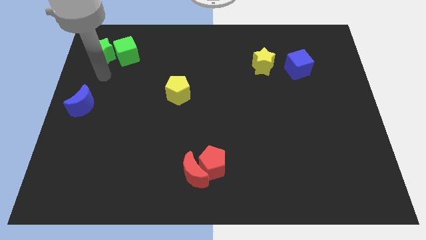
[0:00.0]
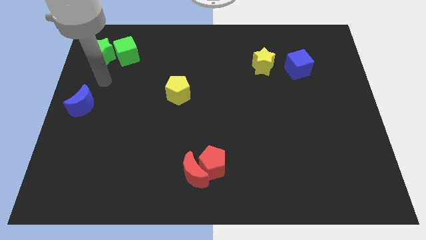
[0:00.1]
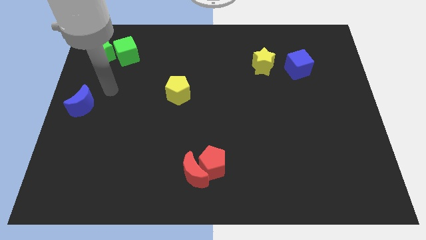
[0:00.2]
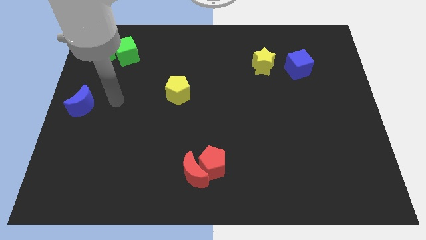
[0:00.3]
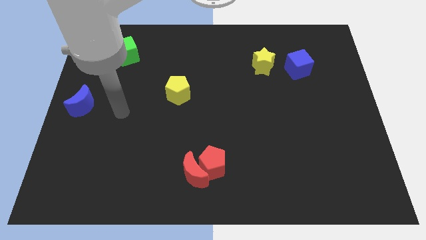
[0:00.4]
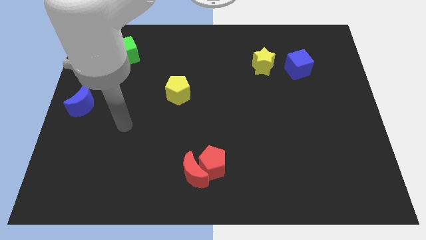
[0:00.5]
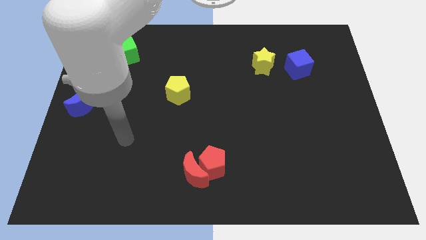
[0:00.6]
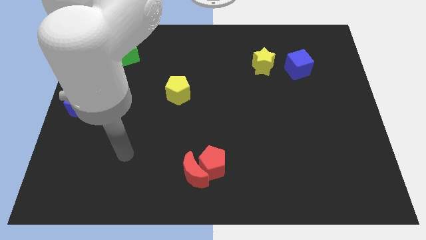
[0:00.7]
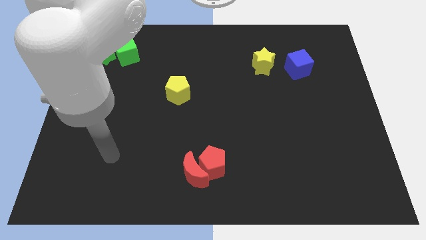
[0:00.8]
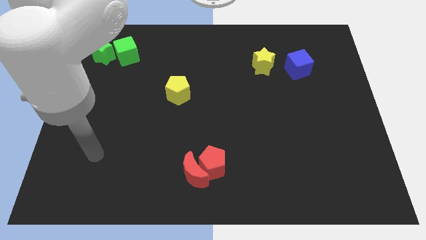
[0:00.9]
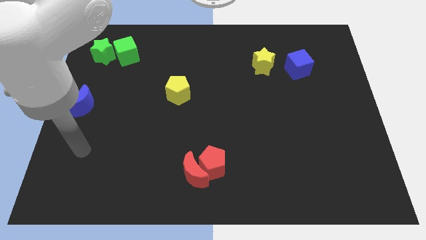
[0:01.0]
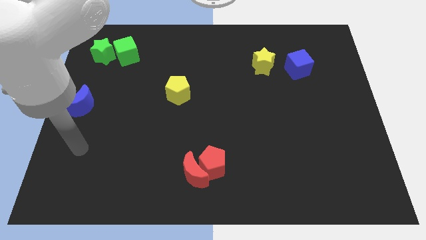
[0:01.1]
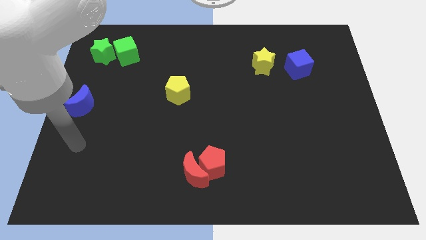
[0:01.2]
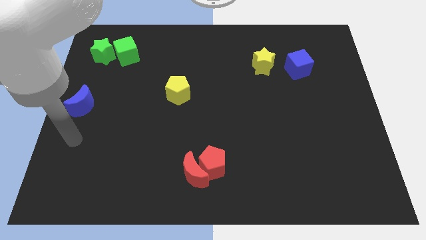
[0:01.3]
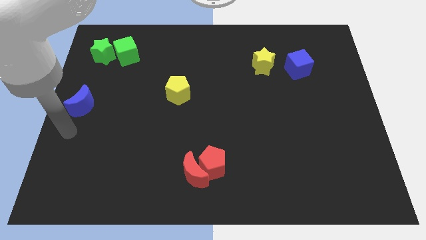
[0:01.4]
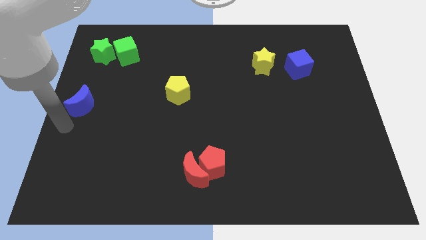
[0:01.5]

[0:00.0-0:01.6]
place your arm to the bottom of blue moon

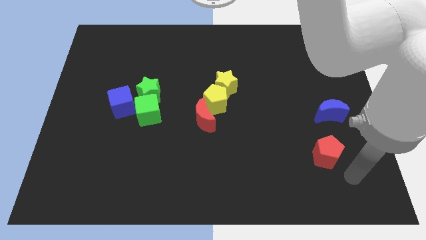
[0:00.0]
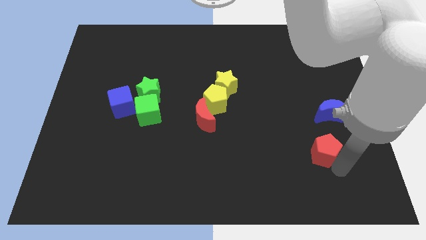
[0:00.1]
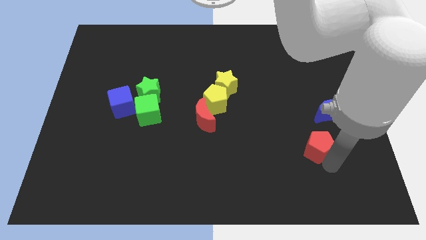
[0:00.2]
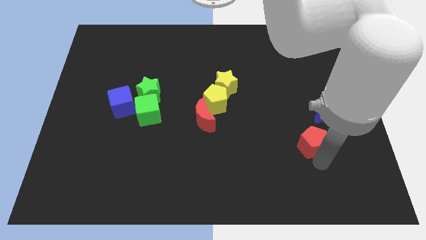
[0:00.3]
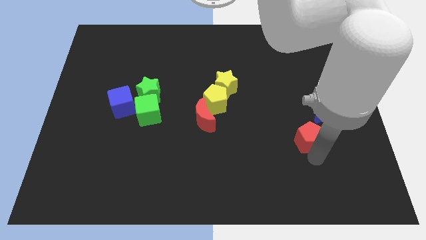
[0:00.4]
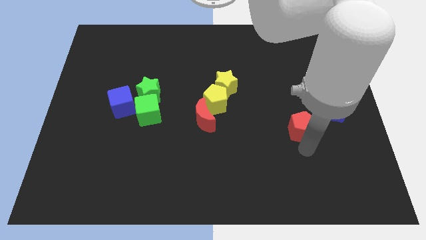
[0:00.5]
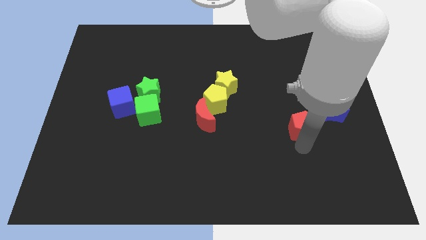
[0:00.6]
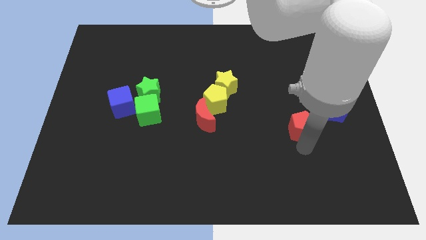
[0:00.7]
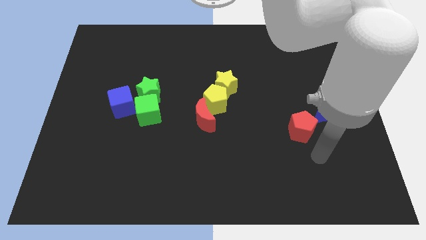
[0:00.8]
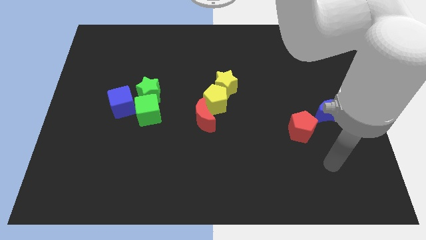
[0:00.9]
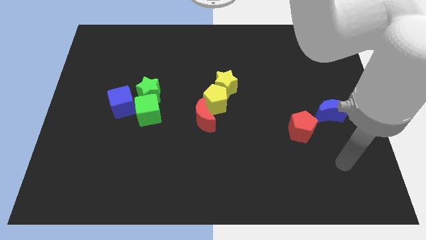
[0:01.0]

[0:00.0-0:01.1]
push the red pentagon close to the blue crescent

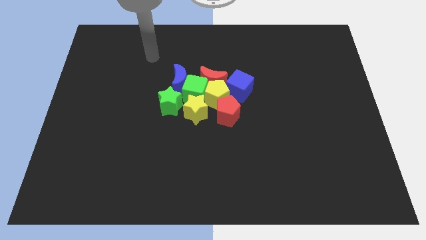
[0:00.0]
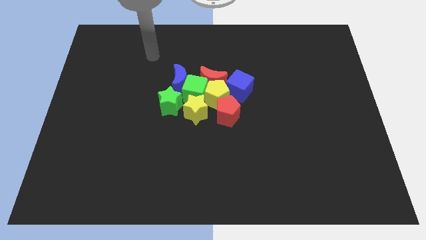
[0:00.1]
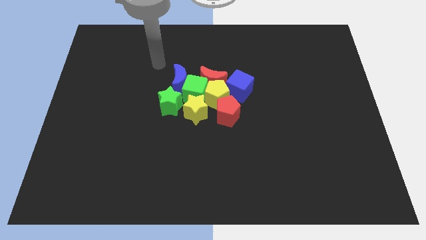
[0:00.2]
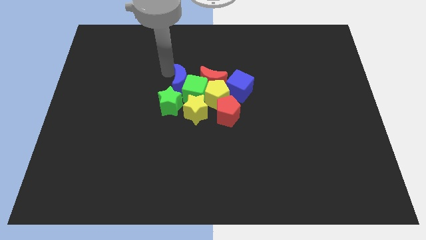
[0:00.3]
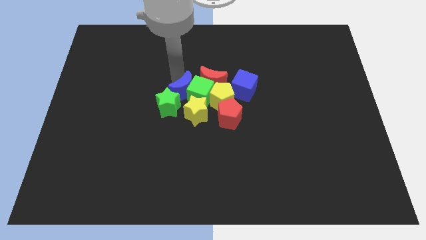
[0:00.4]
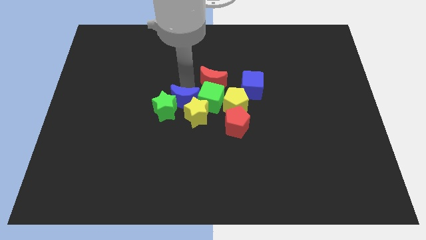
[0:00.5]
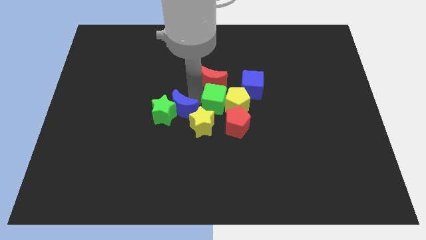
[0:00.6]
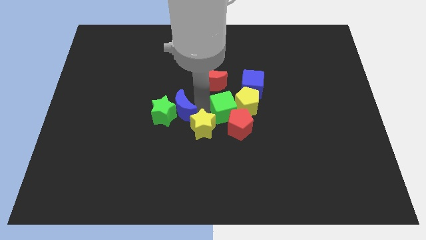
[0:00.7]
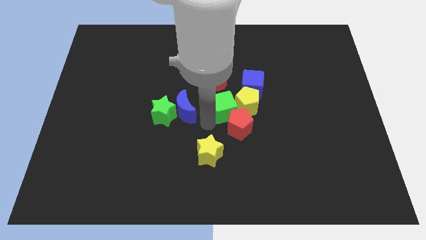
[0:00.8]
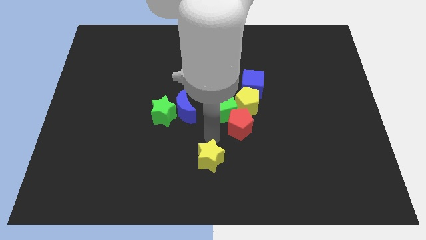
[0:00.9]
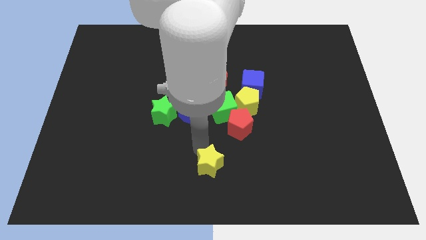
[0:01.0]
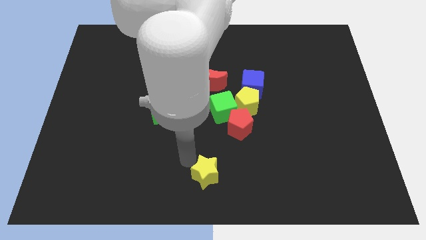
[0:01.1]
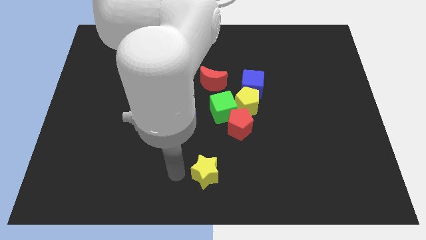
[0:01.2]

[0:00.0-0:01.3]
push the yellow star to the bottom center

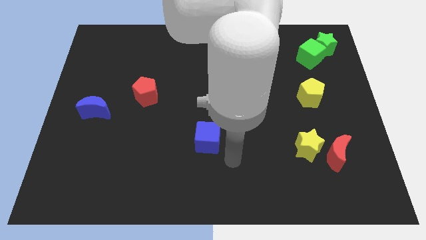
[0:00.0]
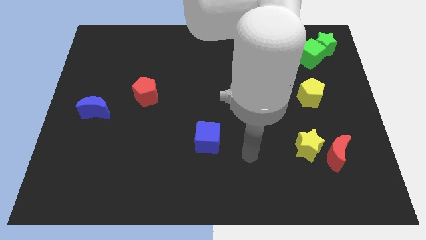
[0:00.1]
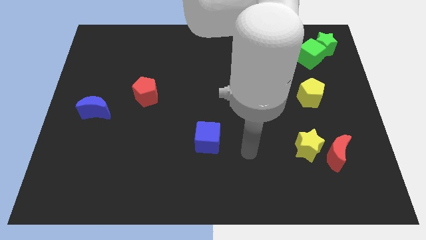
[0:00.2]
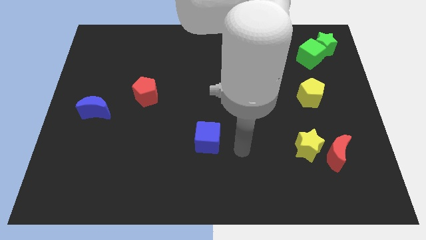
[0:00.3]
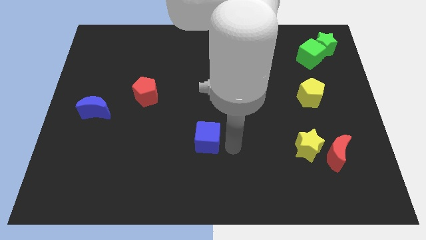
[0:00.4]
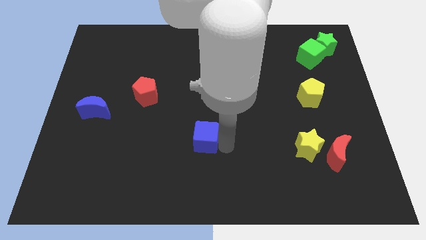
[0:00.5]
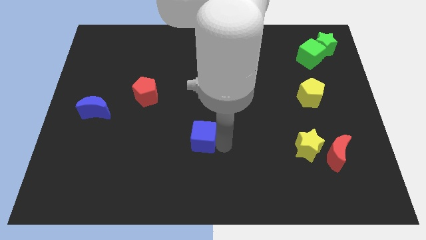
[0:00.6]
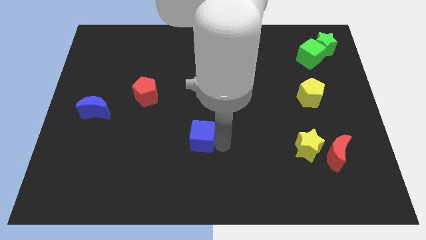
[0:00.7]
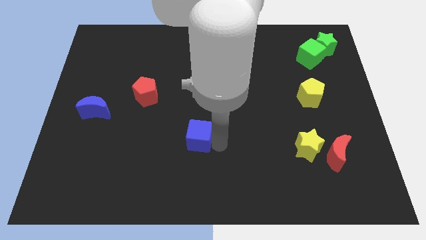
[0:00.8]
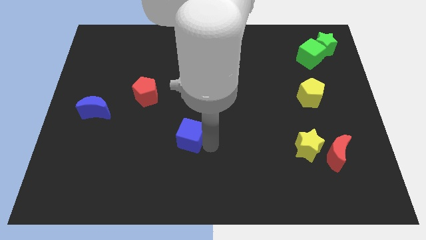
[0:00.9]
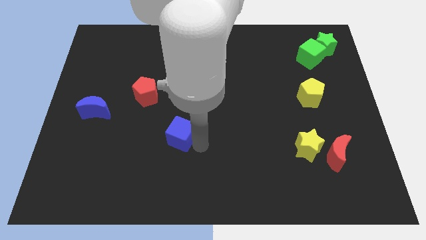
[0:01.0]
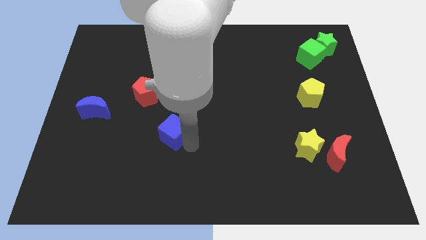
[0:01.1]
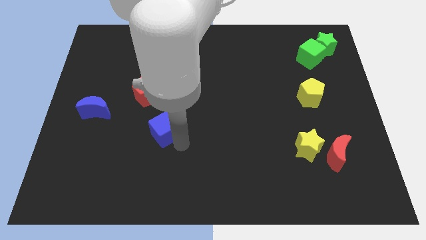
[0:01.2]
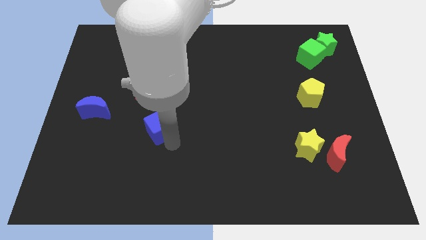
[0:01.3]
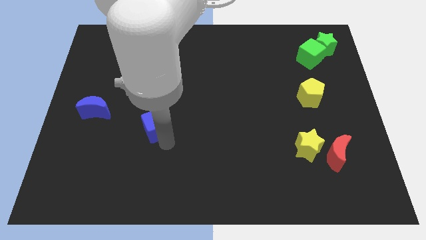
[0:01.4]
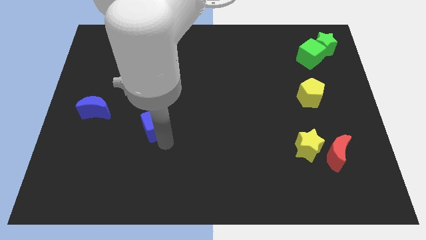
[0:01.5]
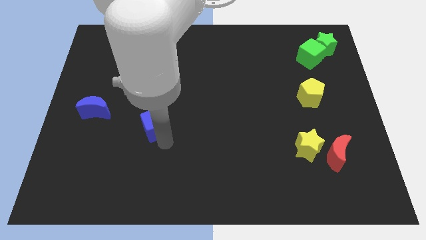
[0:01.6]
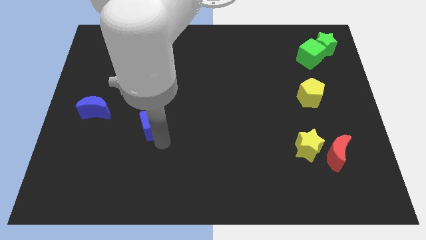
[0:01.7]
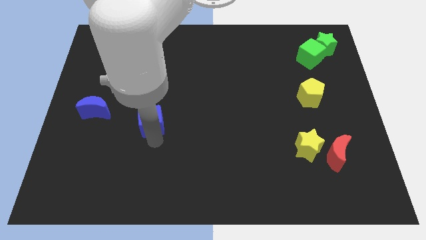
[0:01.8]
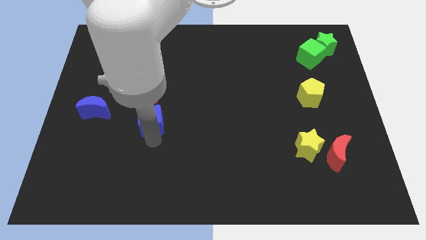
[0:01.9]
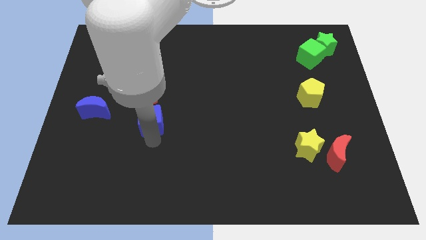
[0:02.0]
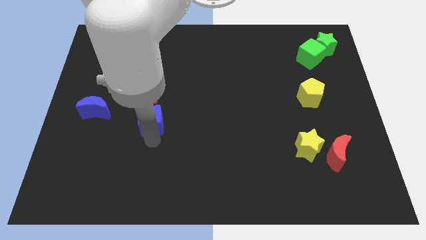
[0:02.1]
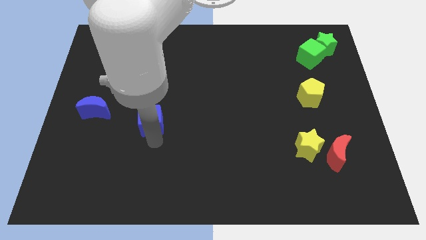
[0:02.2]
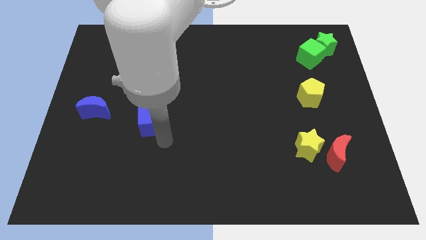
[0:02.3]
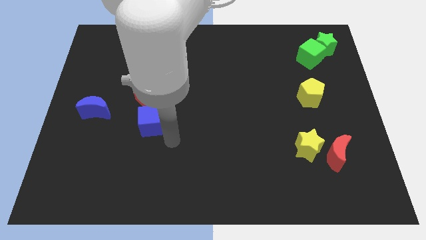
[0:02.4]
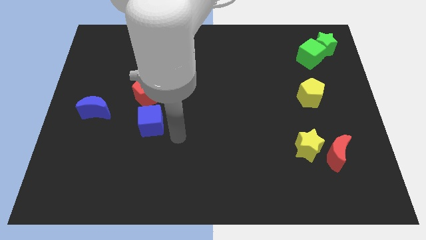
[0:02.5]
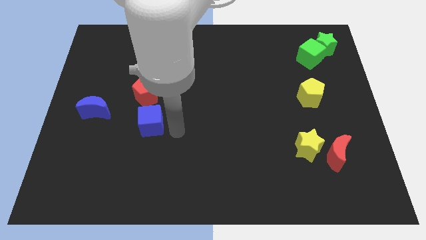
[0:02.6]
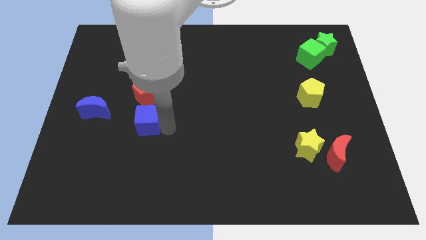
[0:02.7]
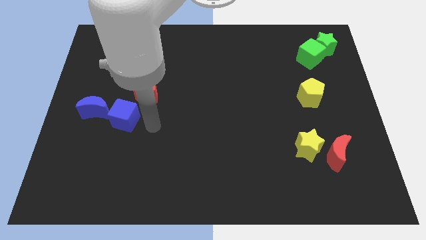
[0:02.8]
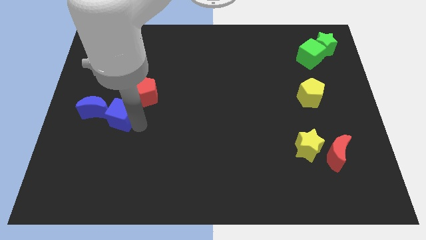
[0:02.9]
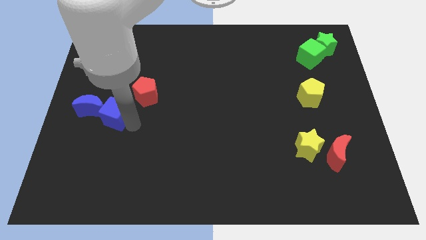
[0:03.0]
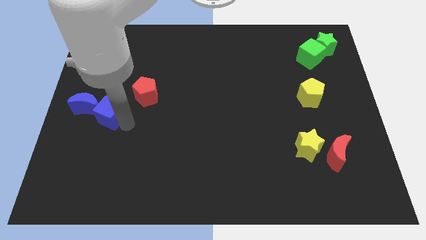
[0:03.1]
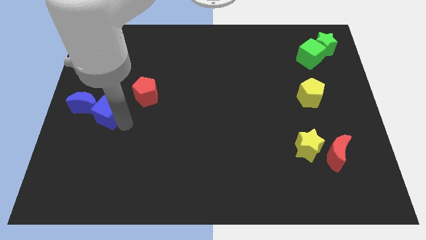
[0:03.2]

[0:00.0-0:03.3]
push the blue cube into blue crescent

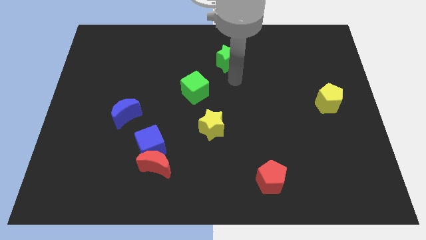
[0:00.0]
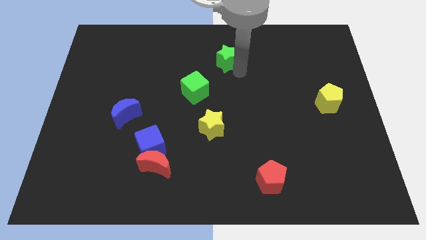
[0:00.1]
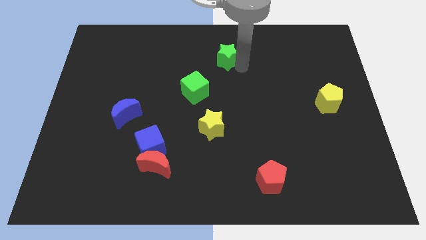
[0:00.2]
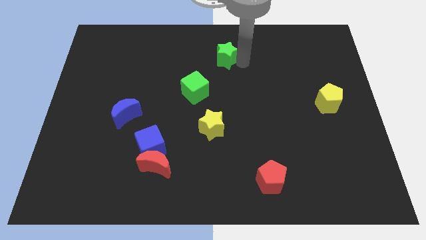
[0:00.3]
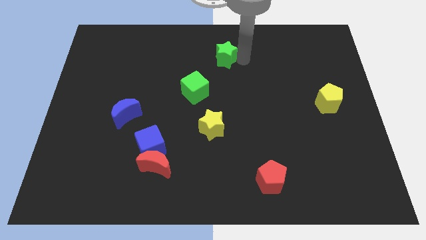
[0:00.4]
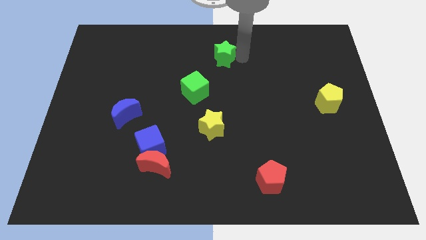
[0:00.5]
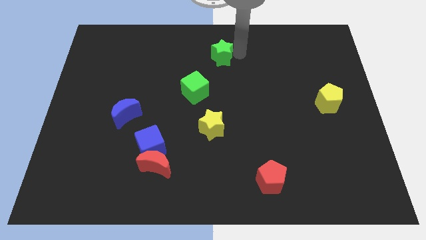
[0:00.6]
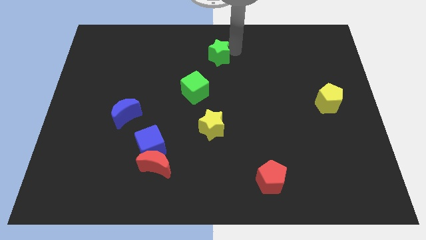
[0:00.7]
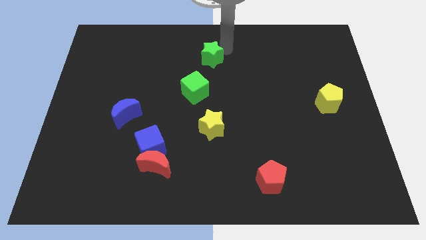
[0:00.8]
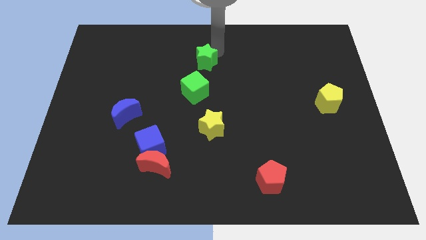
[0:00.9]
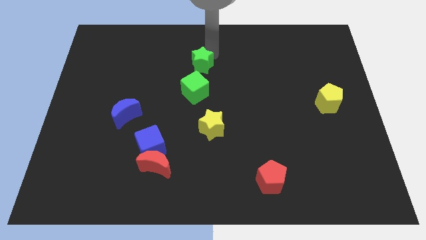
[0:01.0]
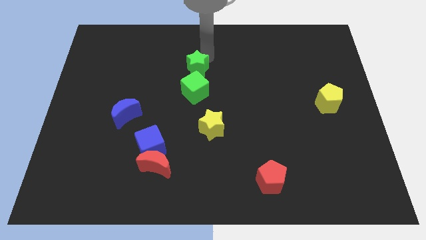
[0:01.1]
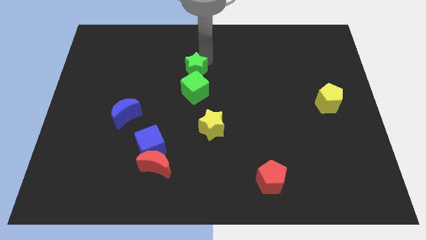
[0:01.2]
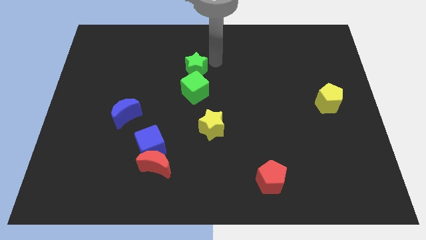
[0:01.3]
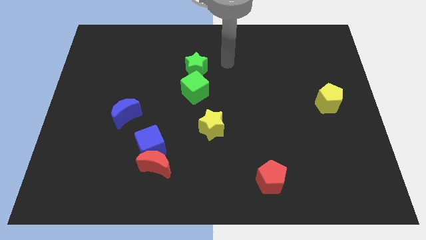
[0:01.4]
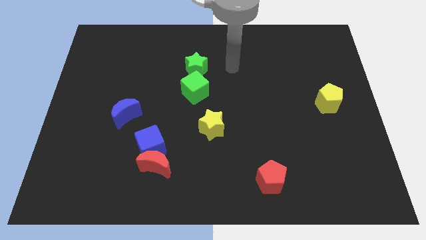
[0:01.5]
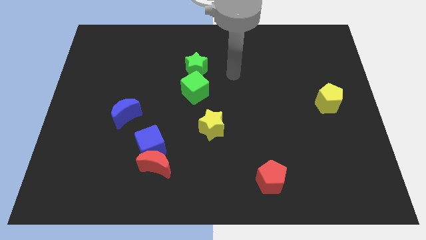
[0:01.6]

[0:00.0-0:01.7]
move the arm above the green cube
